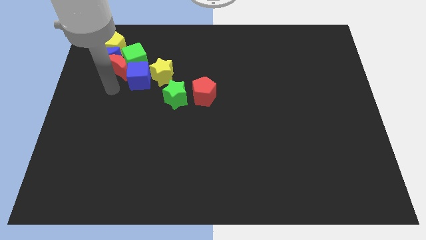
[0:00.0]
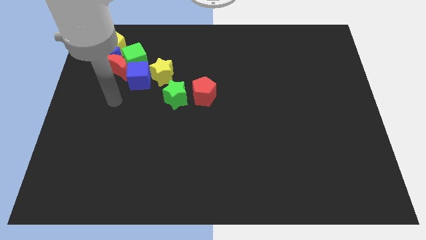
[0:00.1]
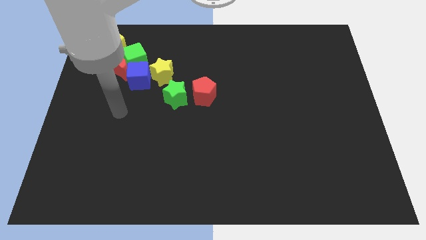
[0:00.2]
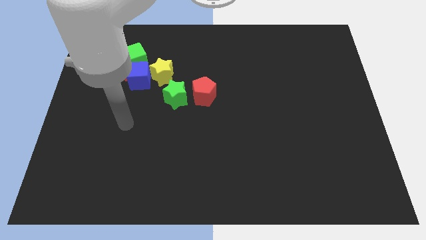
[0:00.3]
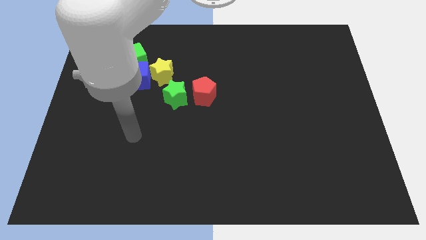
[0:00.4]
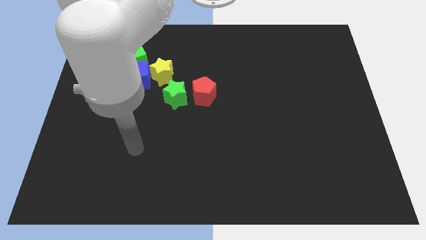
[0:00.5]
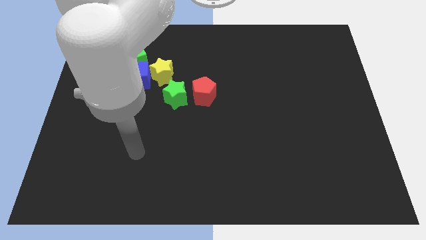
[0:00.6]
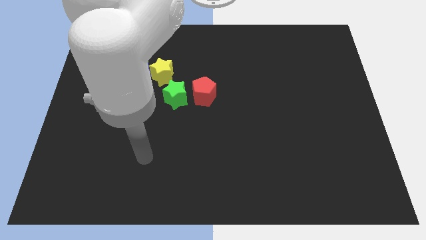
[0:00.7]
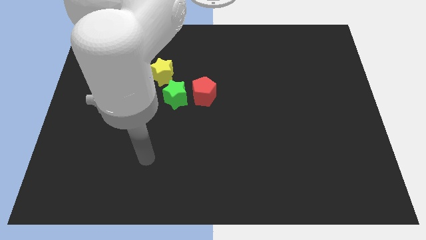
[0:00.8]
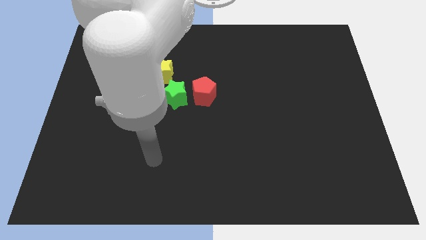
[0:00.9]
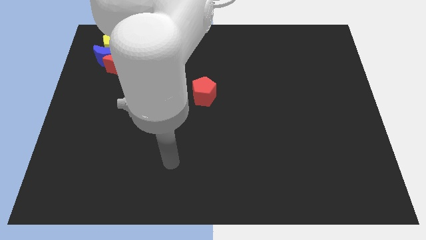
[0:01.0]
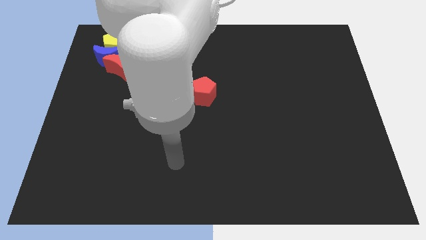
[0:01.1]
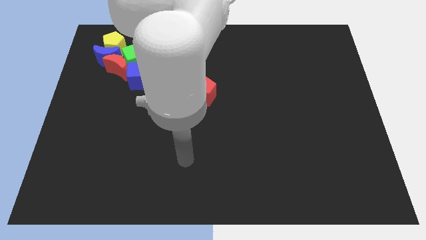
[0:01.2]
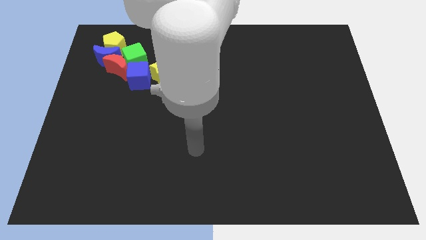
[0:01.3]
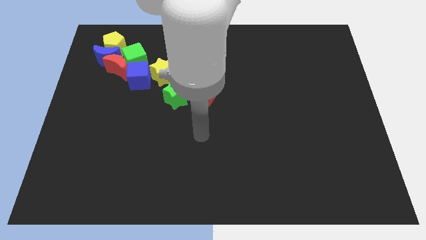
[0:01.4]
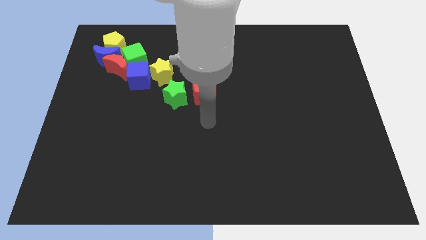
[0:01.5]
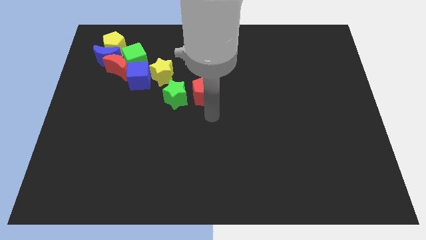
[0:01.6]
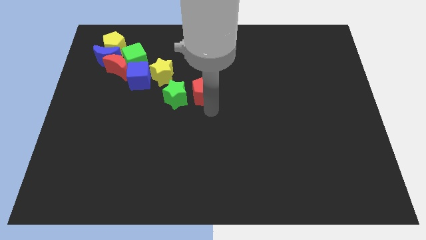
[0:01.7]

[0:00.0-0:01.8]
point the arm below the red pentagon

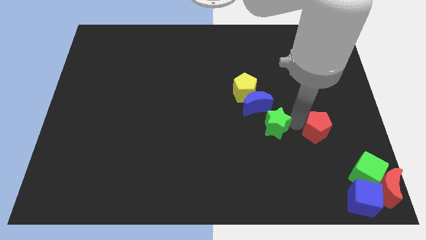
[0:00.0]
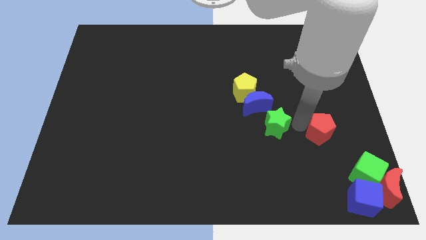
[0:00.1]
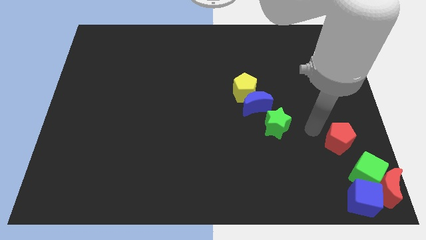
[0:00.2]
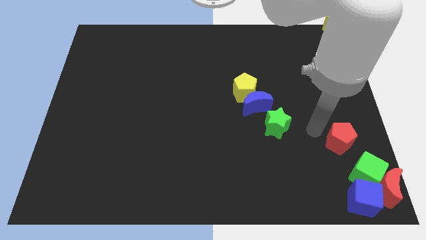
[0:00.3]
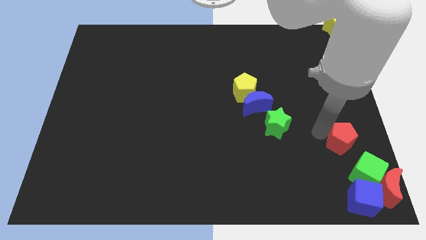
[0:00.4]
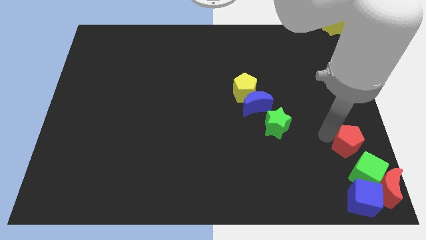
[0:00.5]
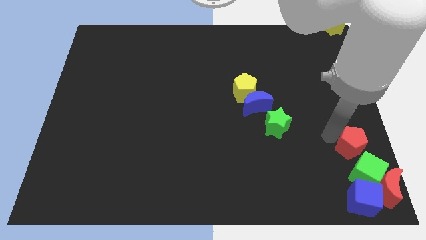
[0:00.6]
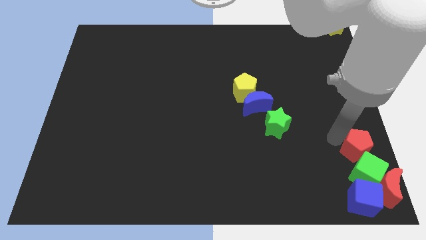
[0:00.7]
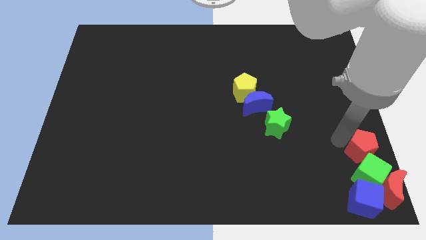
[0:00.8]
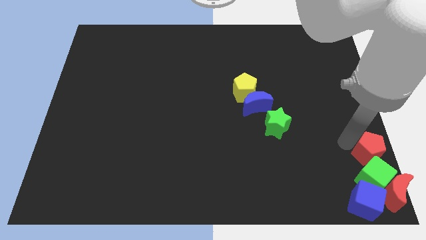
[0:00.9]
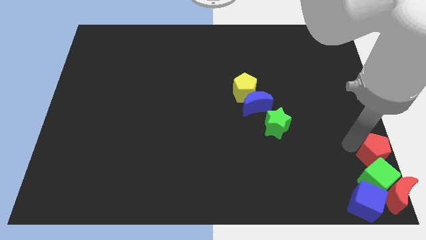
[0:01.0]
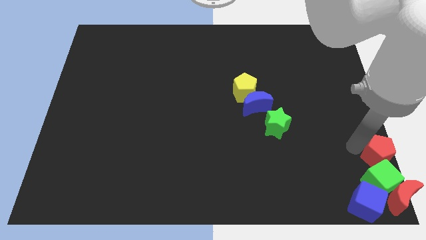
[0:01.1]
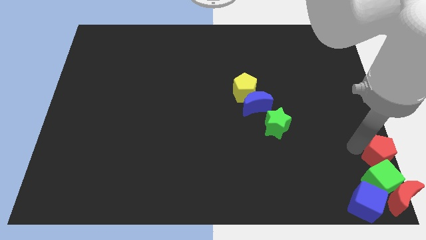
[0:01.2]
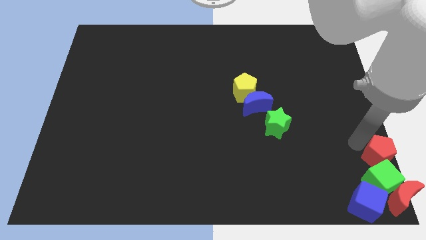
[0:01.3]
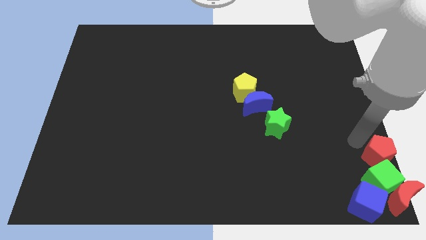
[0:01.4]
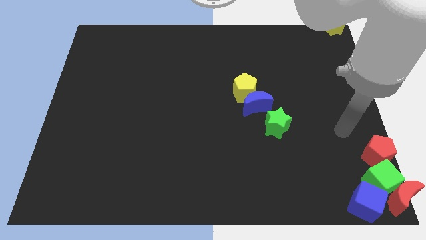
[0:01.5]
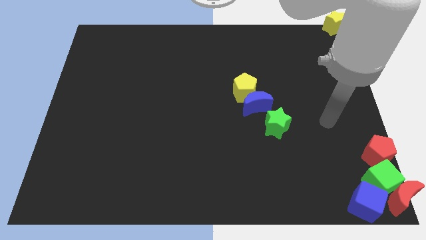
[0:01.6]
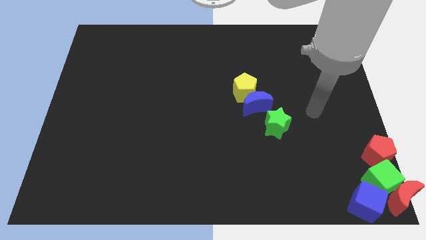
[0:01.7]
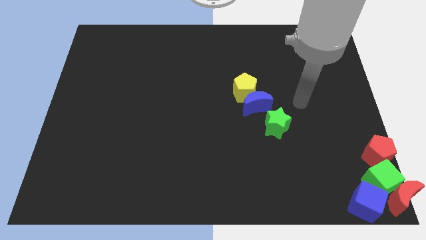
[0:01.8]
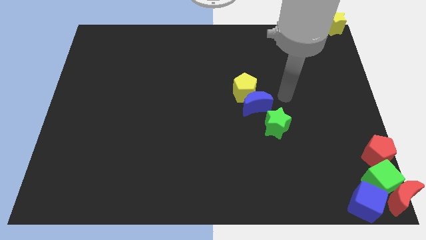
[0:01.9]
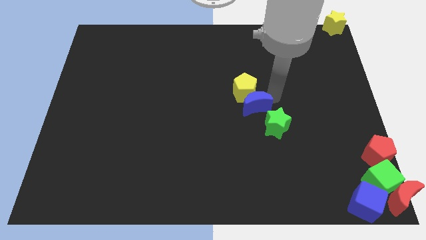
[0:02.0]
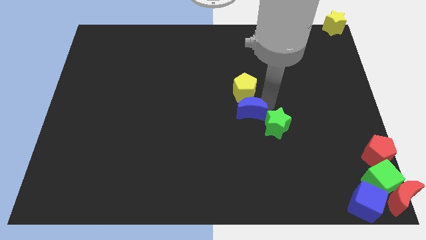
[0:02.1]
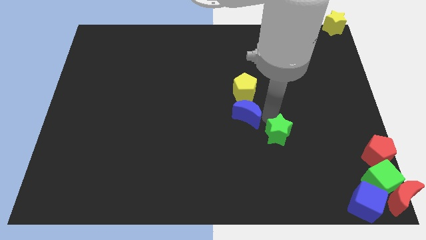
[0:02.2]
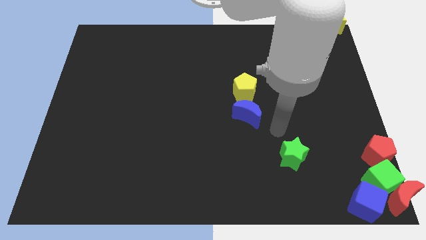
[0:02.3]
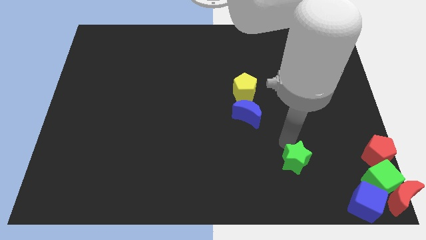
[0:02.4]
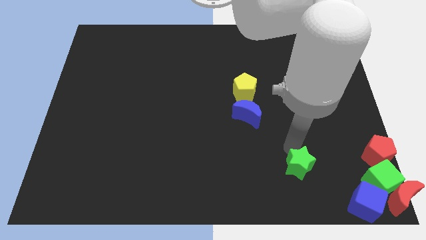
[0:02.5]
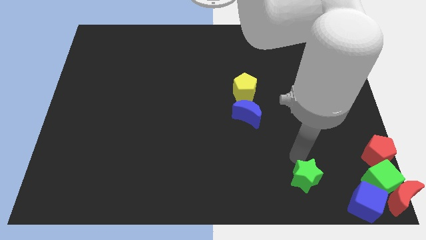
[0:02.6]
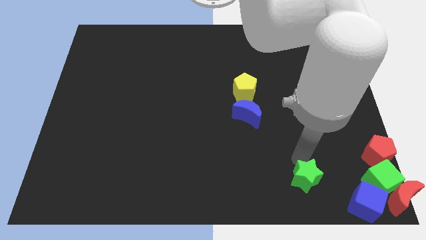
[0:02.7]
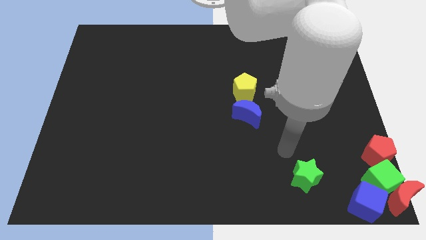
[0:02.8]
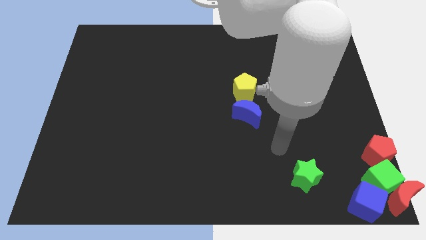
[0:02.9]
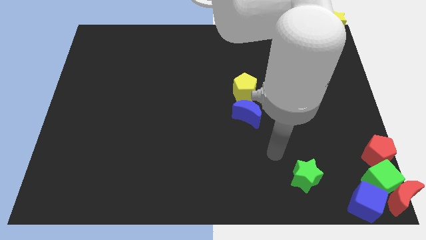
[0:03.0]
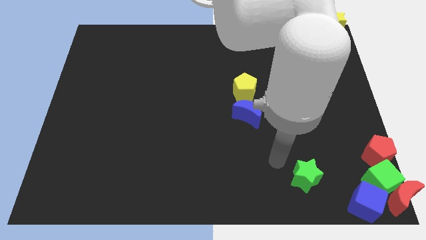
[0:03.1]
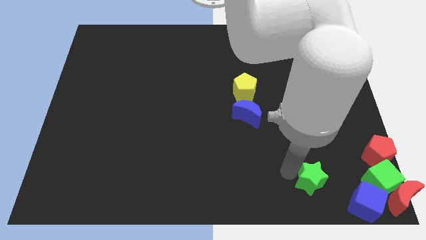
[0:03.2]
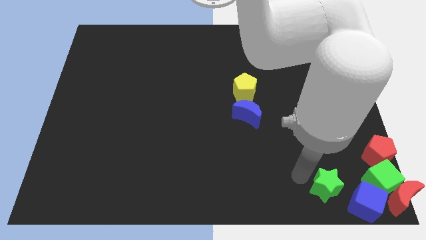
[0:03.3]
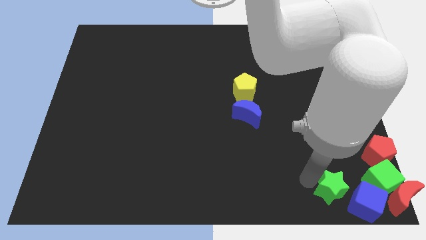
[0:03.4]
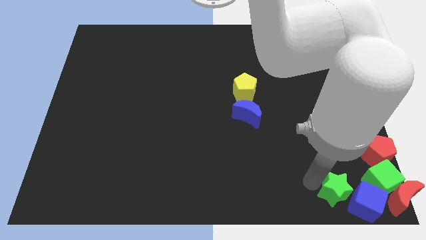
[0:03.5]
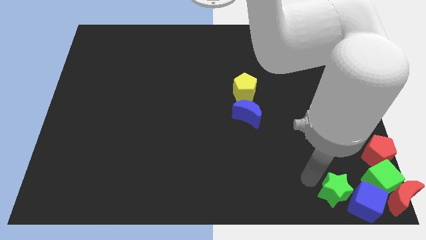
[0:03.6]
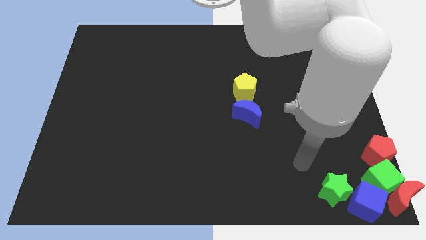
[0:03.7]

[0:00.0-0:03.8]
push green star beside blue cube

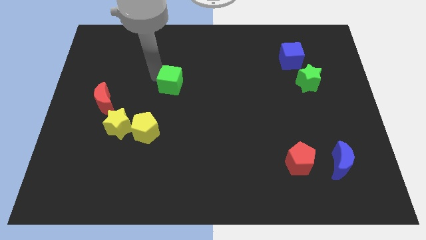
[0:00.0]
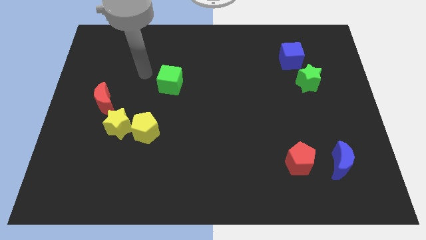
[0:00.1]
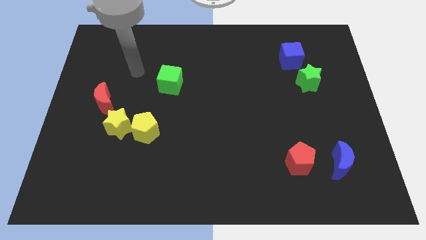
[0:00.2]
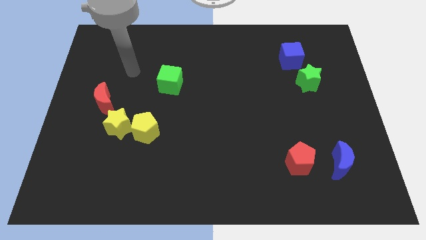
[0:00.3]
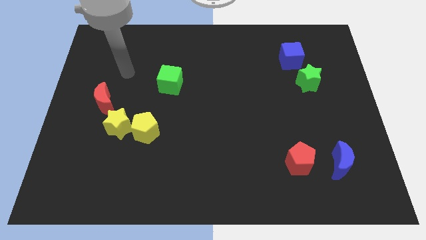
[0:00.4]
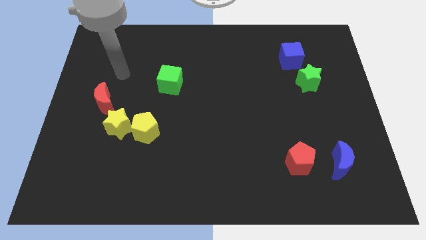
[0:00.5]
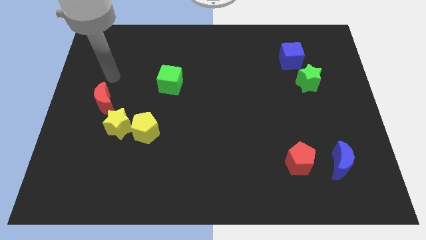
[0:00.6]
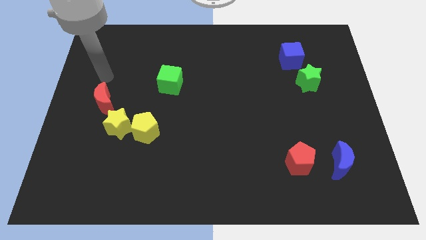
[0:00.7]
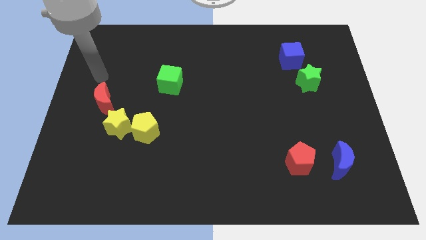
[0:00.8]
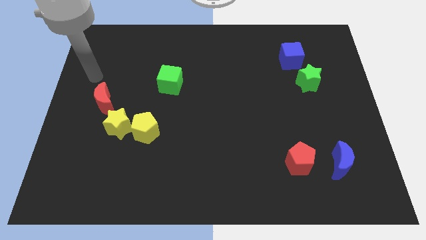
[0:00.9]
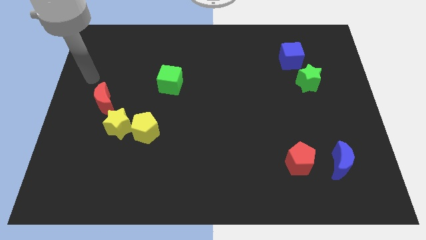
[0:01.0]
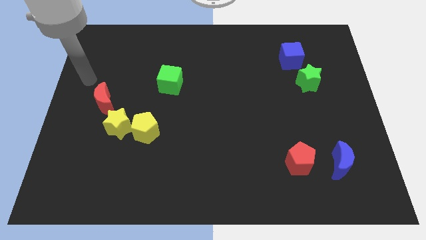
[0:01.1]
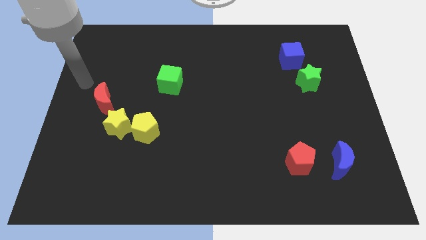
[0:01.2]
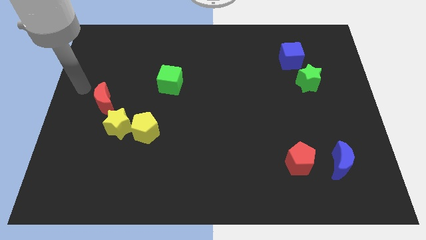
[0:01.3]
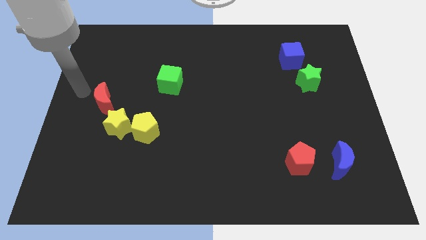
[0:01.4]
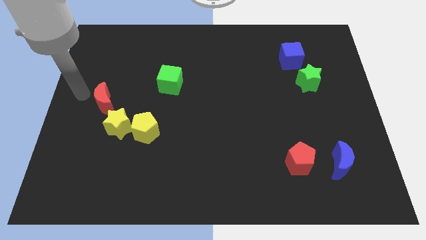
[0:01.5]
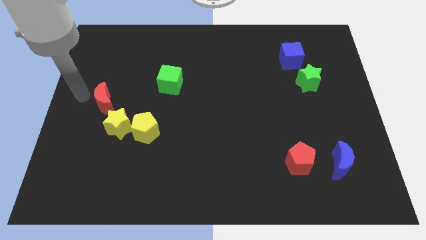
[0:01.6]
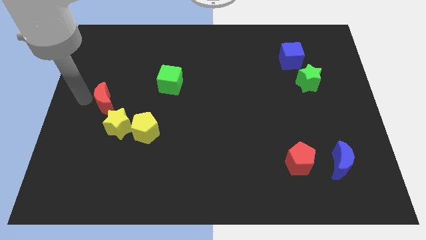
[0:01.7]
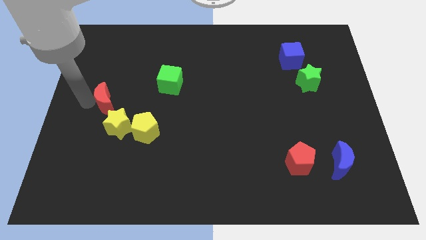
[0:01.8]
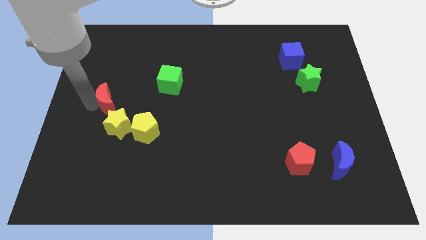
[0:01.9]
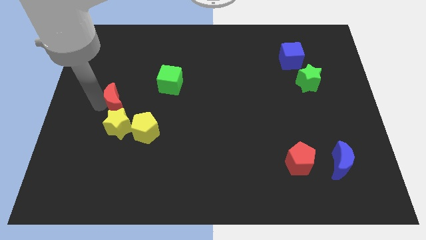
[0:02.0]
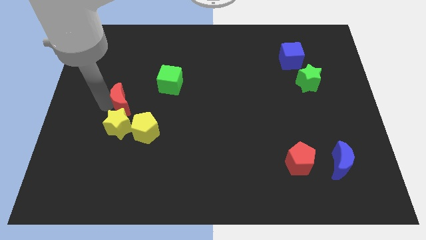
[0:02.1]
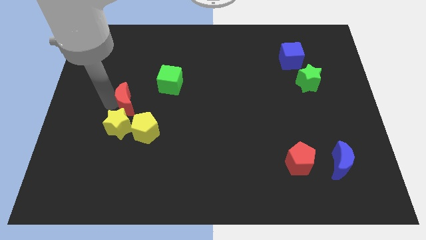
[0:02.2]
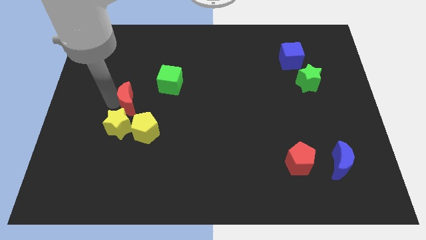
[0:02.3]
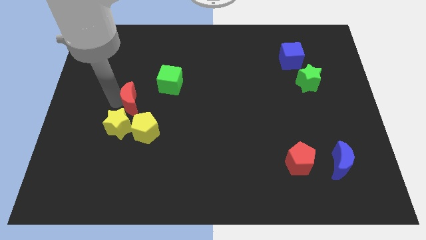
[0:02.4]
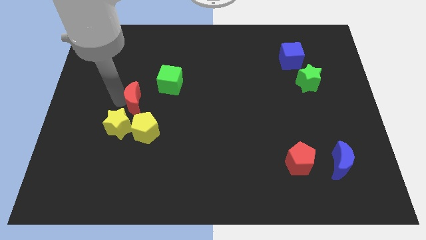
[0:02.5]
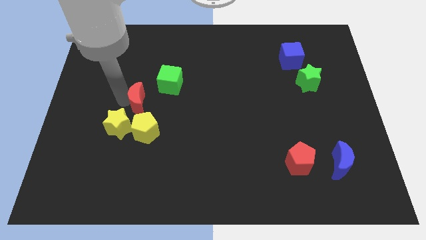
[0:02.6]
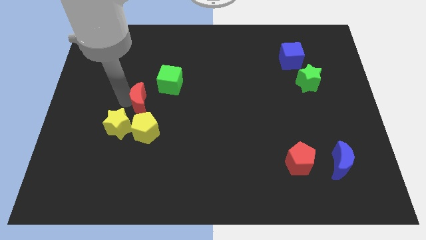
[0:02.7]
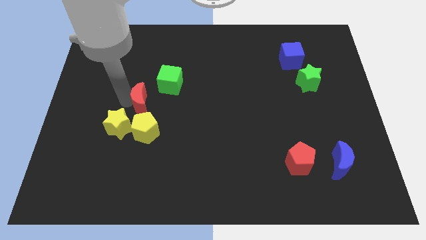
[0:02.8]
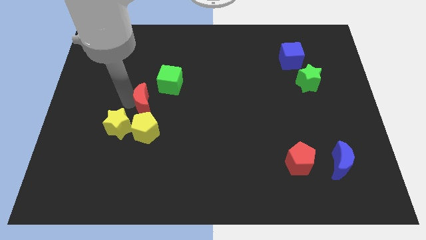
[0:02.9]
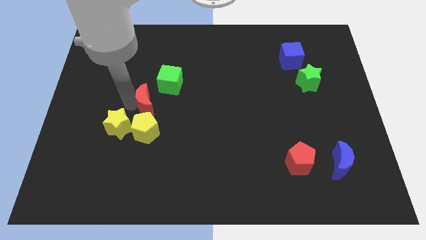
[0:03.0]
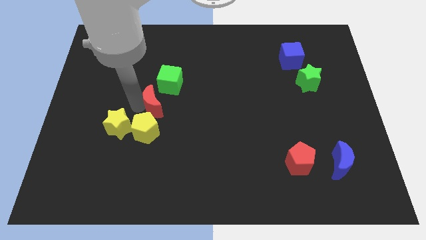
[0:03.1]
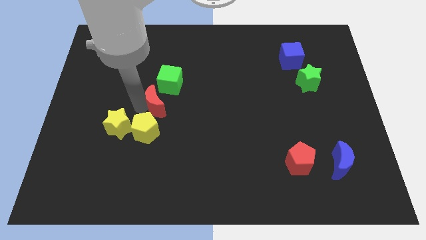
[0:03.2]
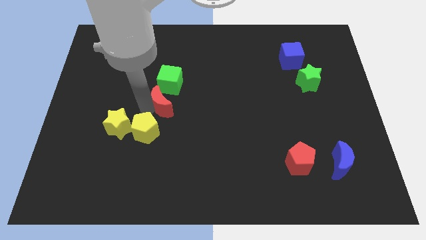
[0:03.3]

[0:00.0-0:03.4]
place the red crescent to the bottom of the green cube
